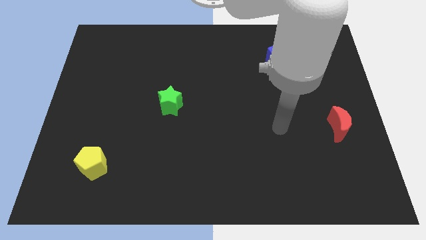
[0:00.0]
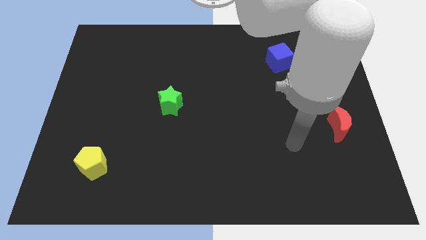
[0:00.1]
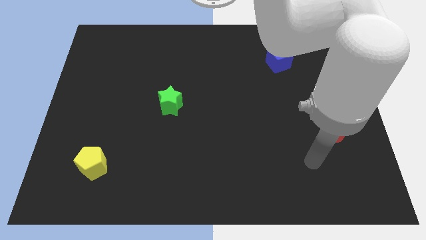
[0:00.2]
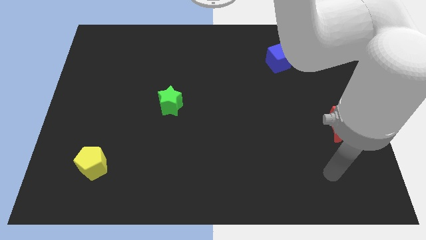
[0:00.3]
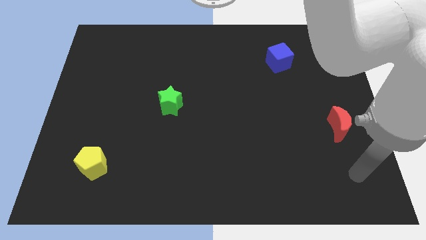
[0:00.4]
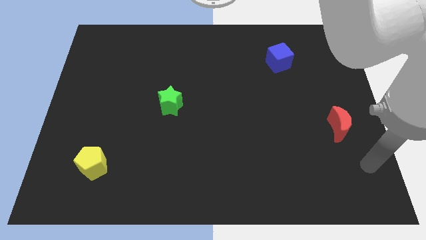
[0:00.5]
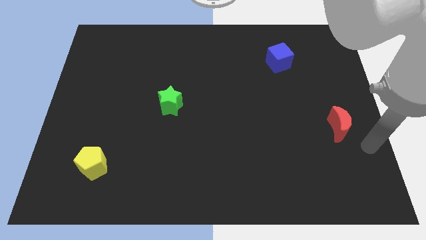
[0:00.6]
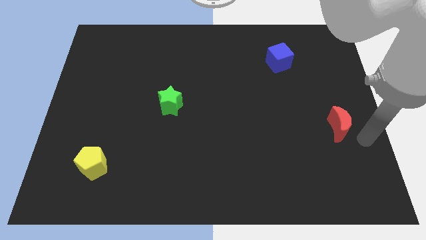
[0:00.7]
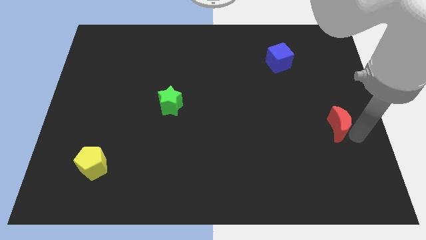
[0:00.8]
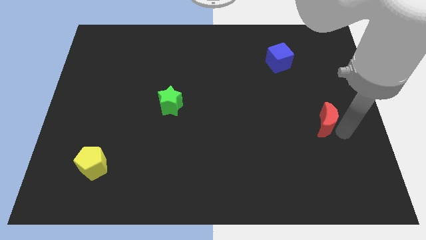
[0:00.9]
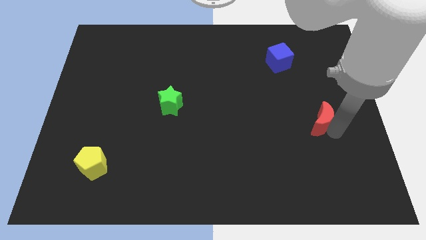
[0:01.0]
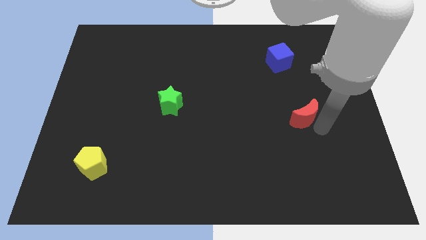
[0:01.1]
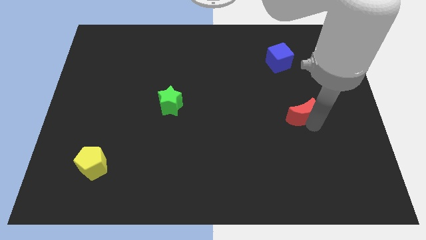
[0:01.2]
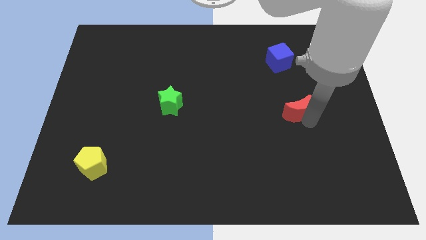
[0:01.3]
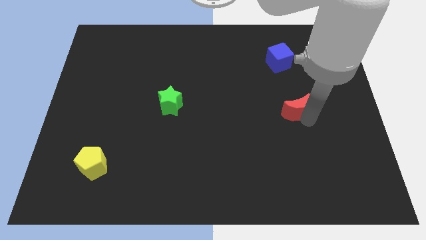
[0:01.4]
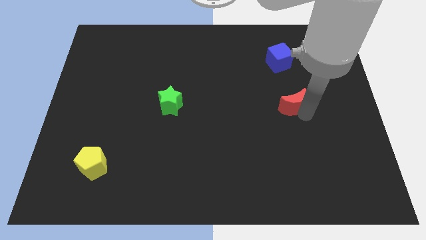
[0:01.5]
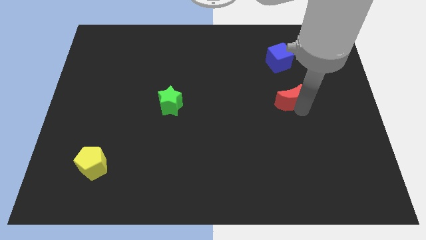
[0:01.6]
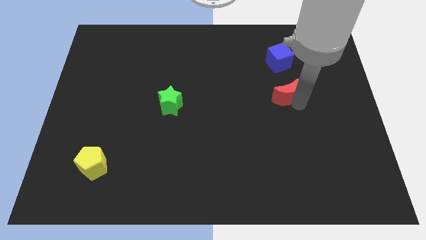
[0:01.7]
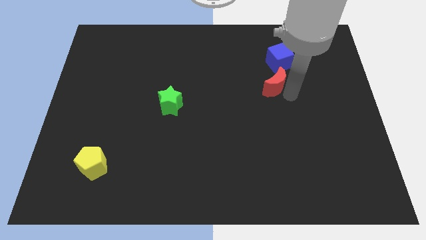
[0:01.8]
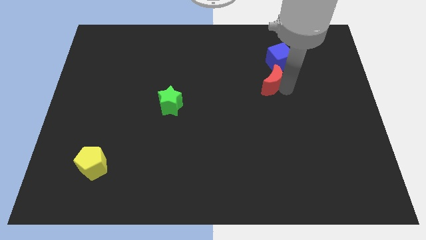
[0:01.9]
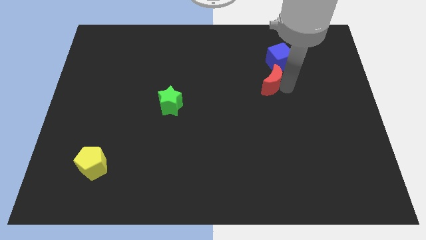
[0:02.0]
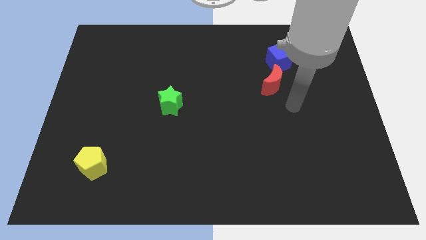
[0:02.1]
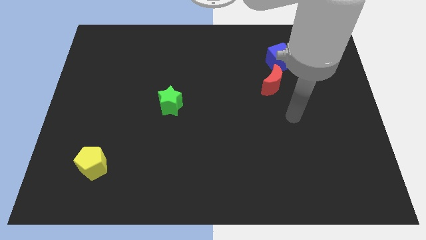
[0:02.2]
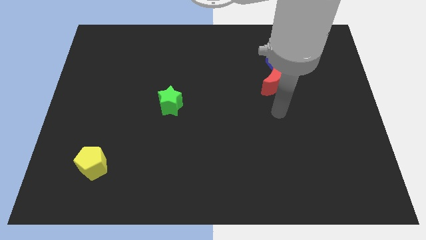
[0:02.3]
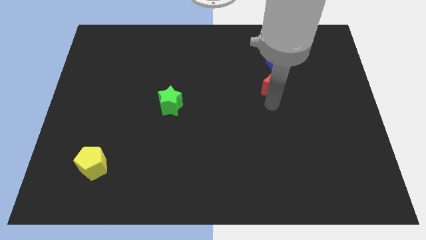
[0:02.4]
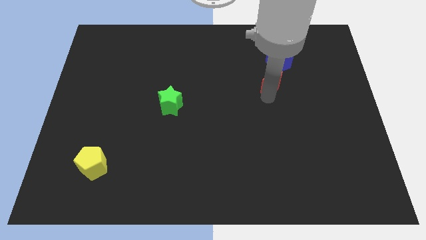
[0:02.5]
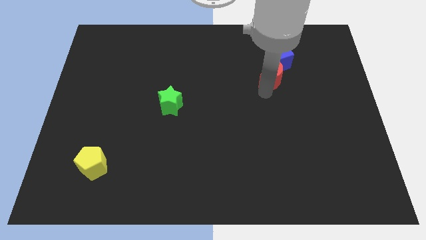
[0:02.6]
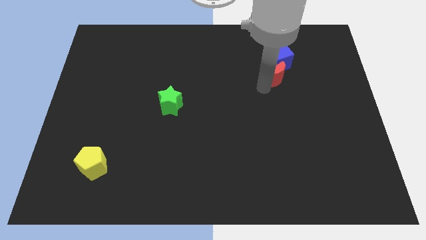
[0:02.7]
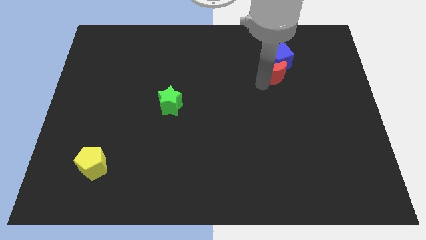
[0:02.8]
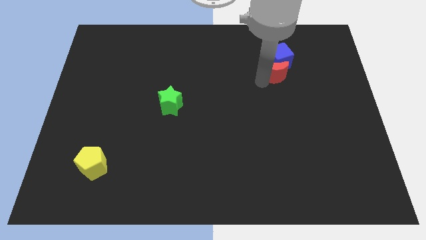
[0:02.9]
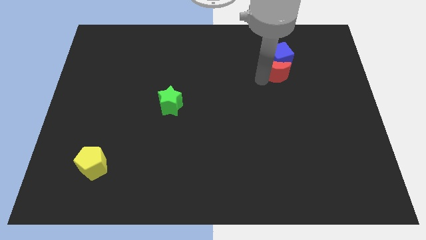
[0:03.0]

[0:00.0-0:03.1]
slide the moon towards the cube

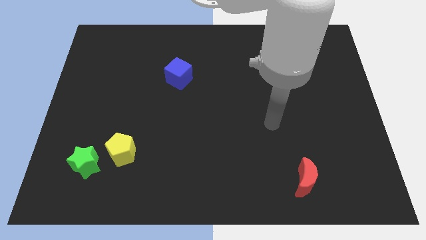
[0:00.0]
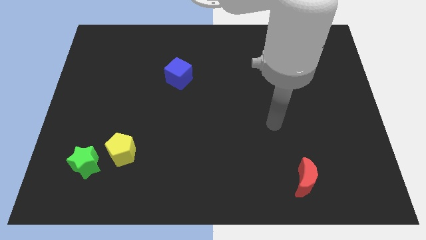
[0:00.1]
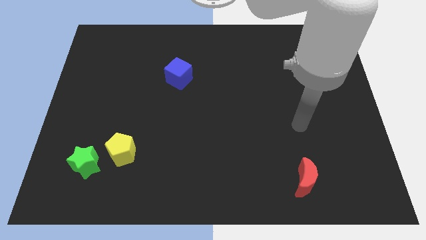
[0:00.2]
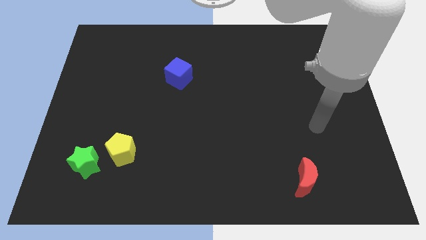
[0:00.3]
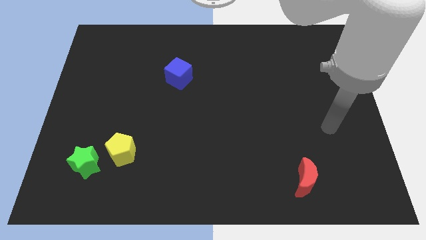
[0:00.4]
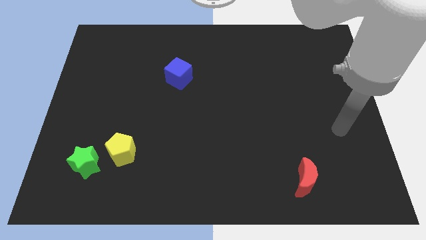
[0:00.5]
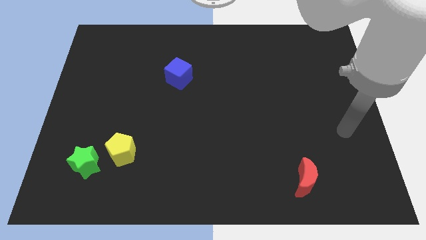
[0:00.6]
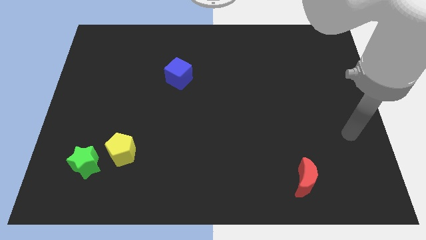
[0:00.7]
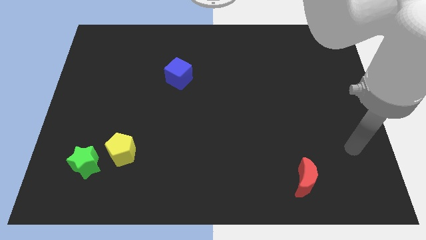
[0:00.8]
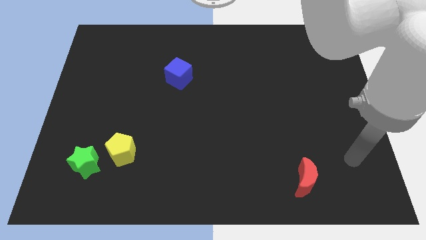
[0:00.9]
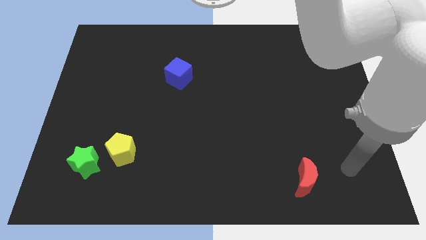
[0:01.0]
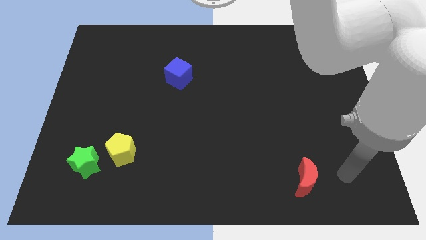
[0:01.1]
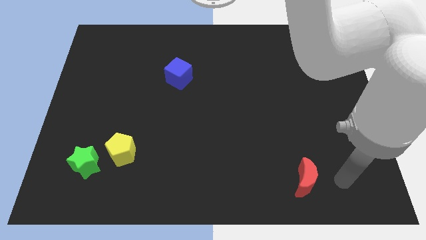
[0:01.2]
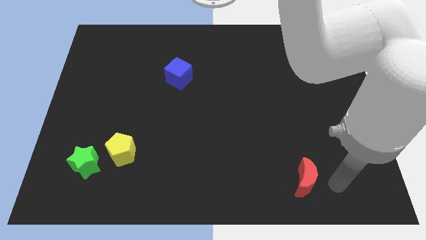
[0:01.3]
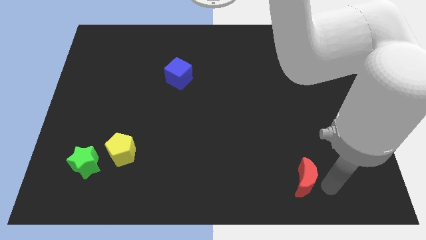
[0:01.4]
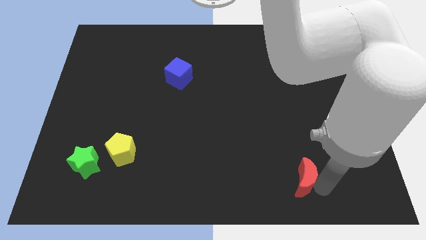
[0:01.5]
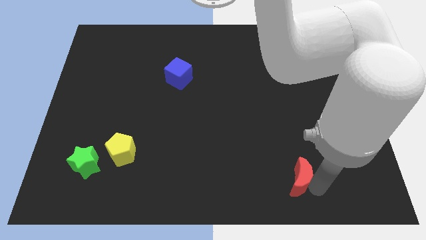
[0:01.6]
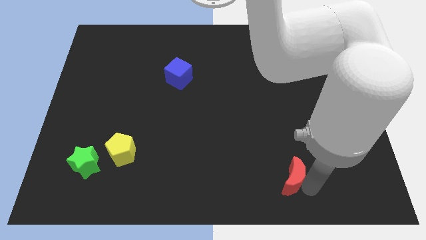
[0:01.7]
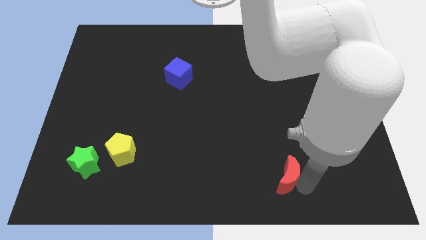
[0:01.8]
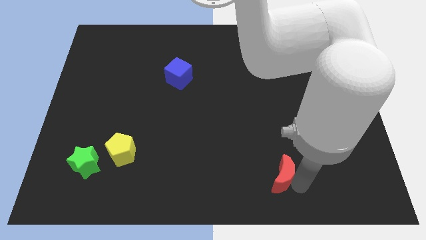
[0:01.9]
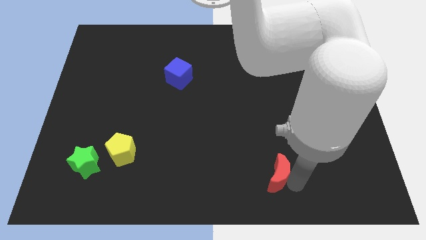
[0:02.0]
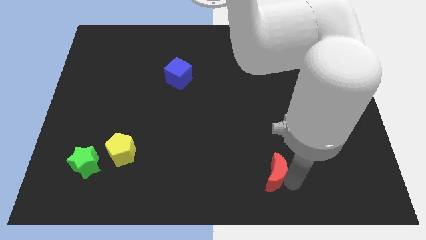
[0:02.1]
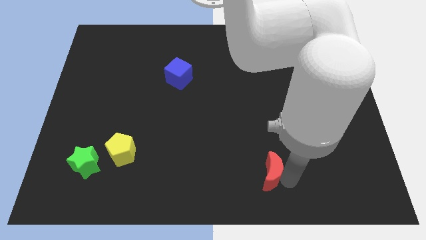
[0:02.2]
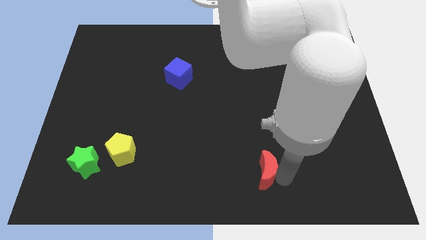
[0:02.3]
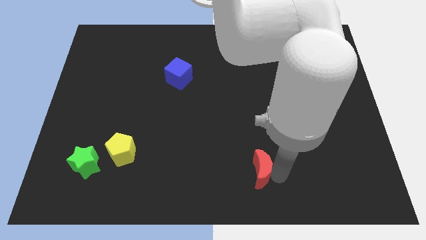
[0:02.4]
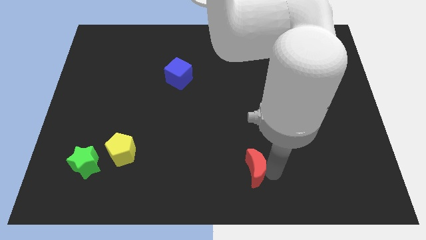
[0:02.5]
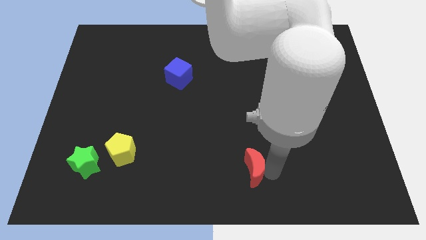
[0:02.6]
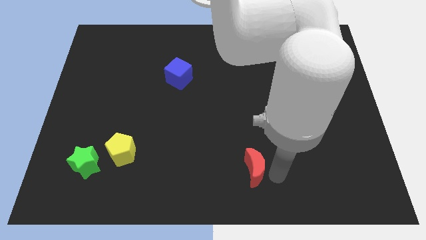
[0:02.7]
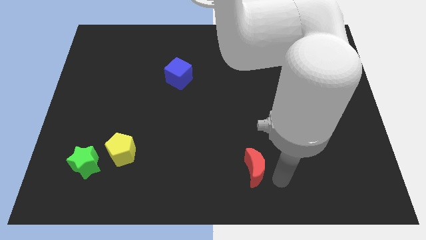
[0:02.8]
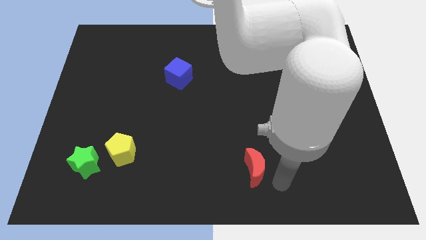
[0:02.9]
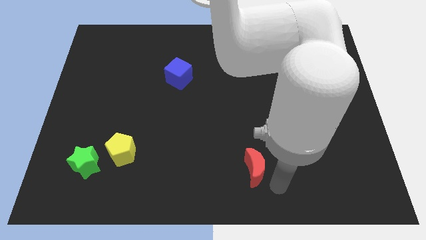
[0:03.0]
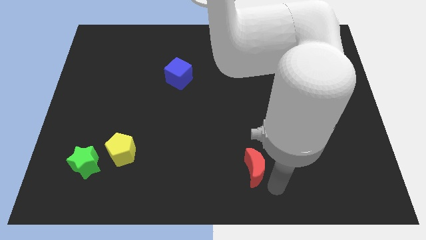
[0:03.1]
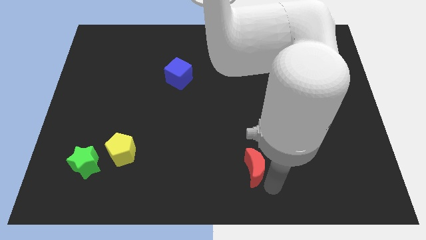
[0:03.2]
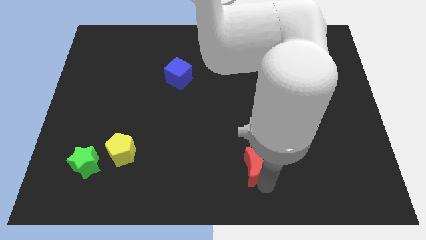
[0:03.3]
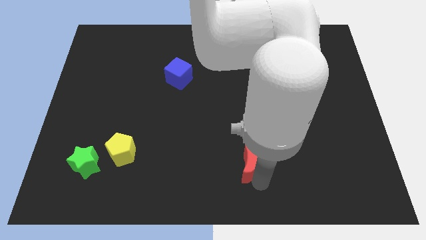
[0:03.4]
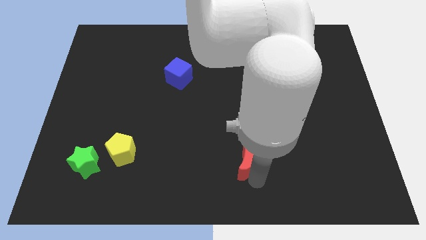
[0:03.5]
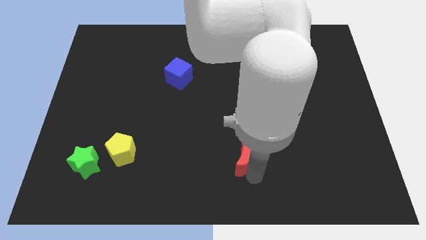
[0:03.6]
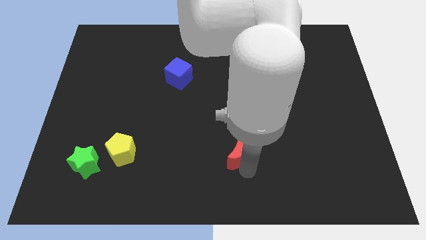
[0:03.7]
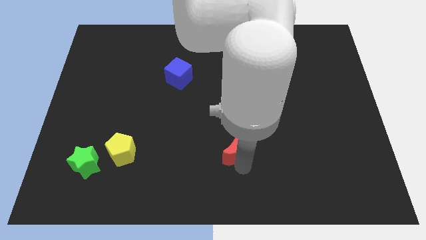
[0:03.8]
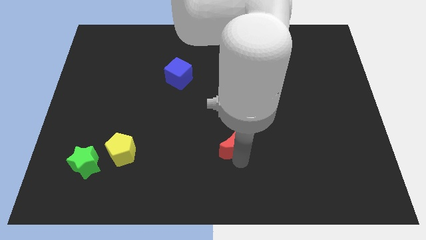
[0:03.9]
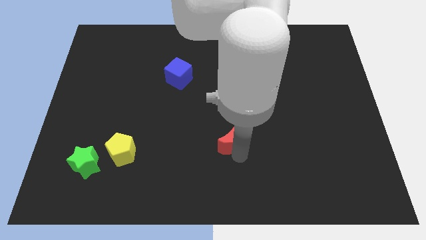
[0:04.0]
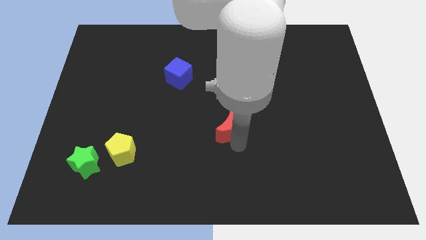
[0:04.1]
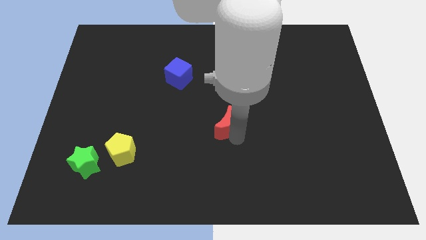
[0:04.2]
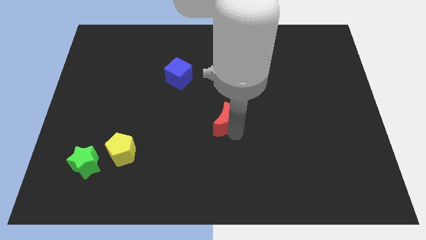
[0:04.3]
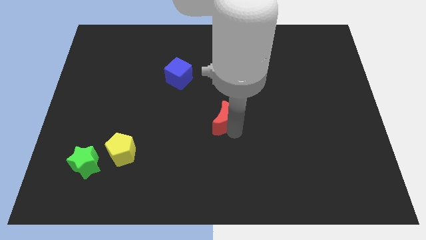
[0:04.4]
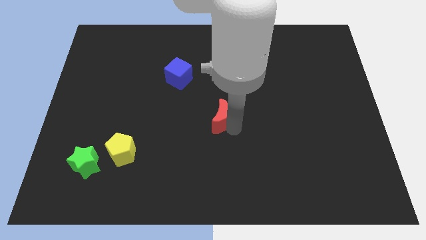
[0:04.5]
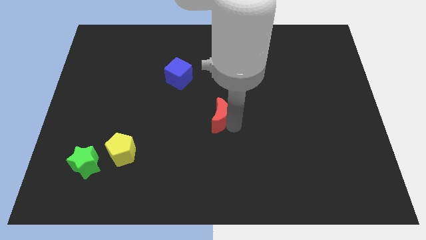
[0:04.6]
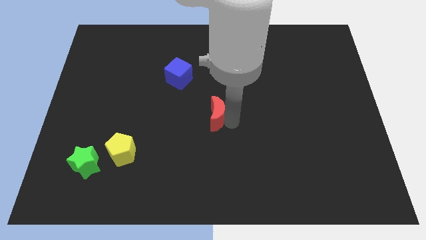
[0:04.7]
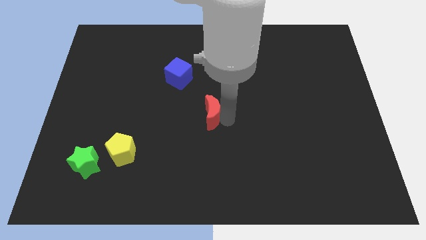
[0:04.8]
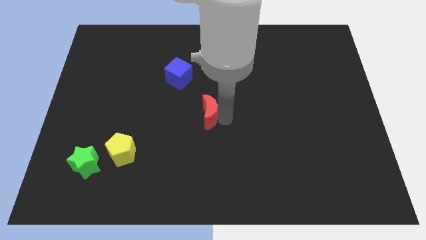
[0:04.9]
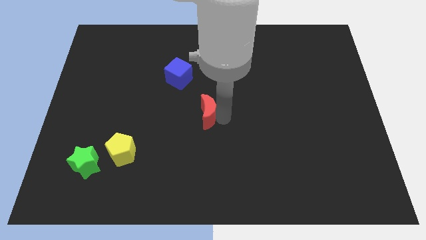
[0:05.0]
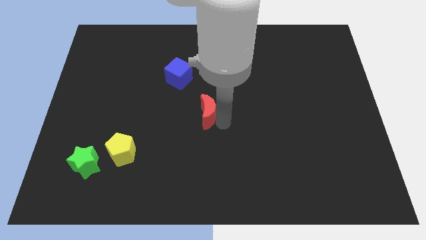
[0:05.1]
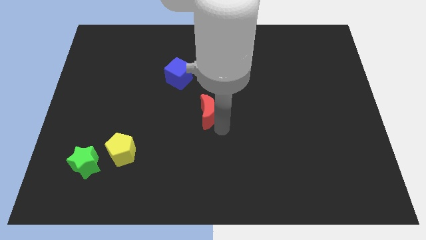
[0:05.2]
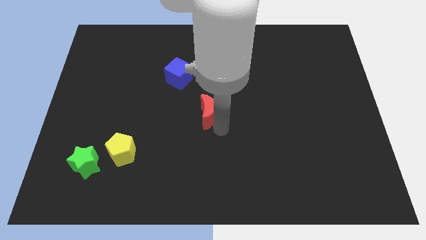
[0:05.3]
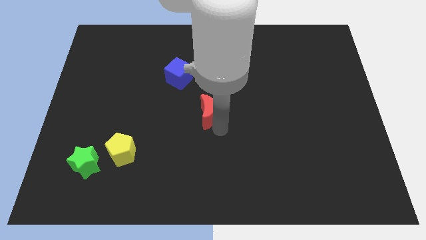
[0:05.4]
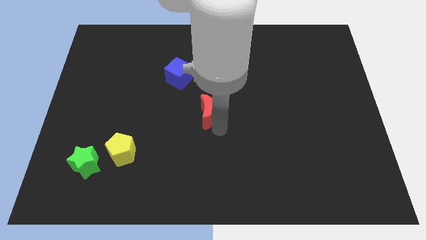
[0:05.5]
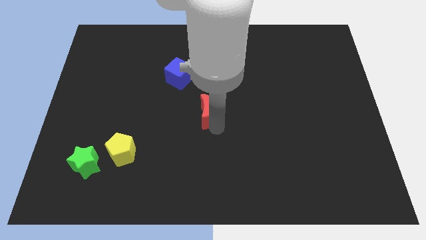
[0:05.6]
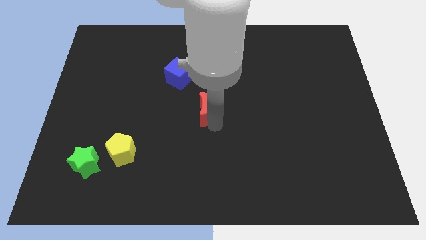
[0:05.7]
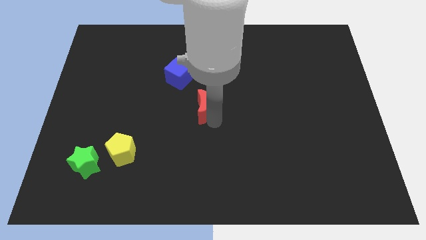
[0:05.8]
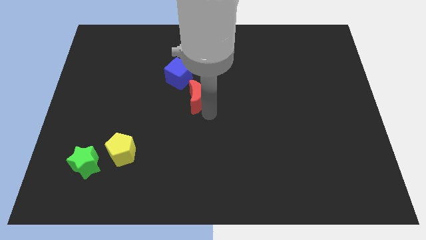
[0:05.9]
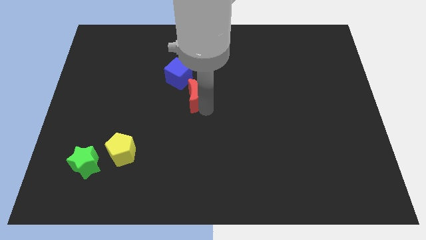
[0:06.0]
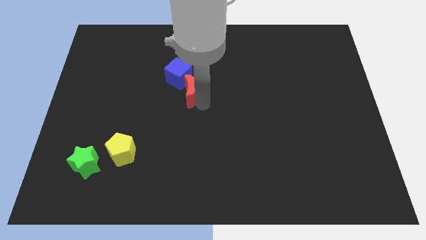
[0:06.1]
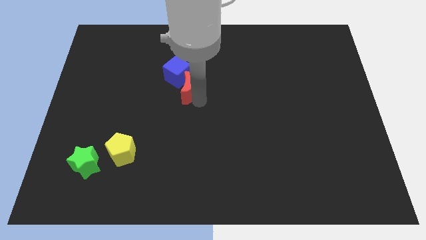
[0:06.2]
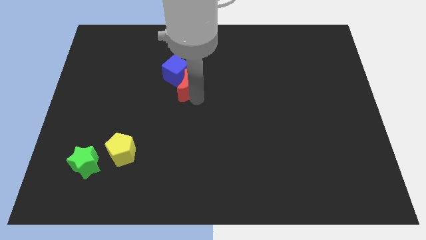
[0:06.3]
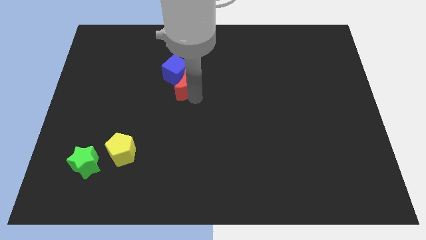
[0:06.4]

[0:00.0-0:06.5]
put the moon towards the blue block
